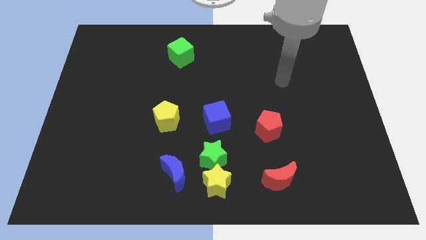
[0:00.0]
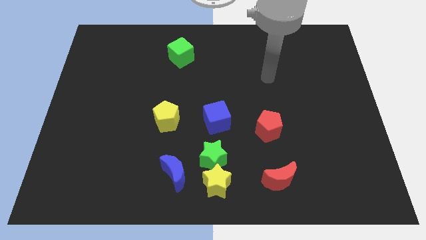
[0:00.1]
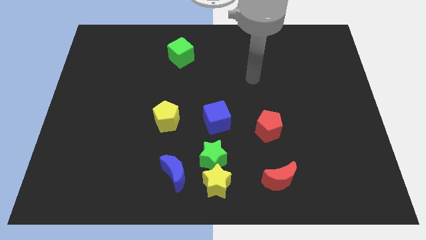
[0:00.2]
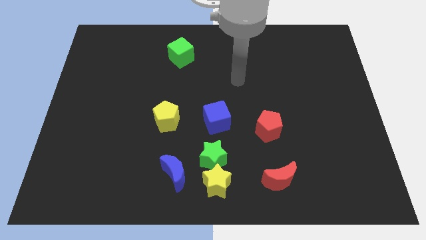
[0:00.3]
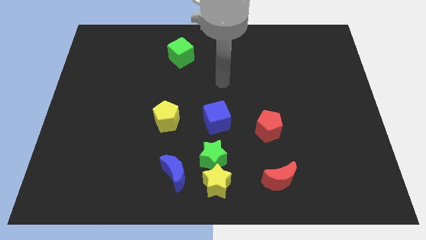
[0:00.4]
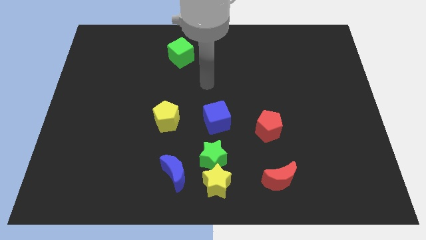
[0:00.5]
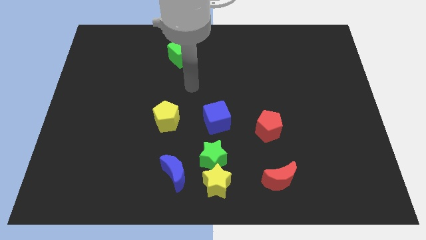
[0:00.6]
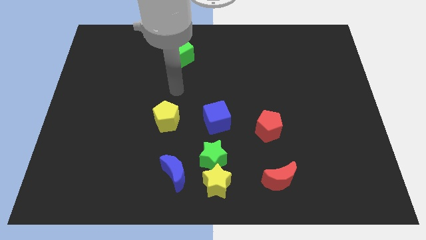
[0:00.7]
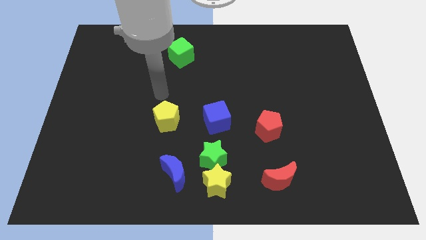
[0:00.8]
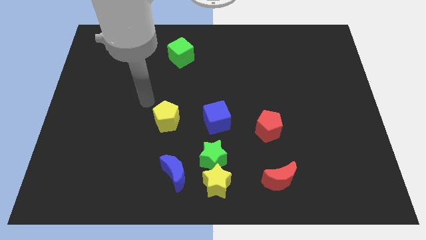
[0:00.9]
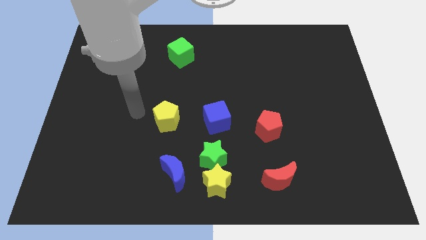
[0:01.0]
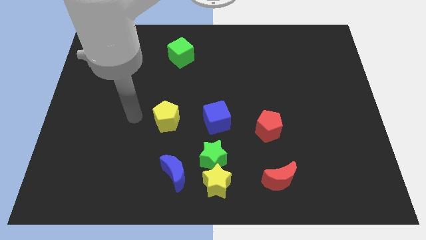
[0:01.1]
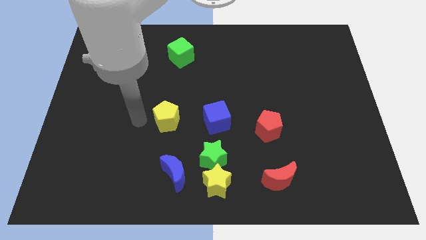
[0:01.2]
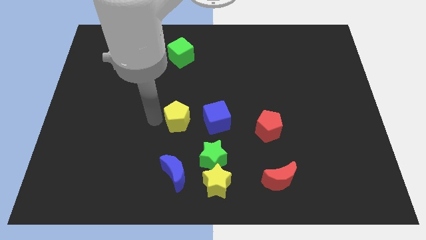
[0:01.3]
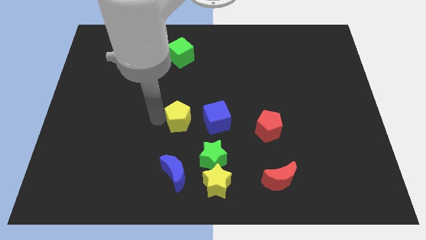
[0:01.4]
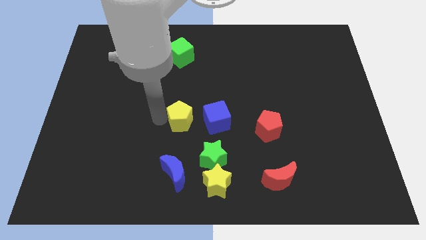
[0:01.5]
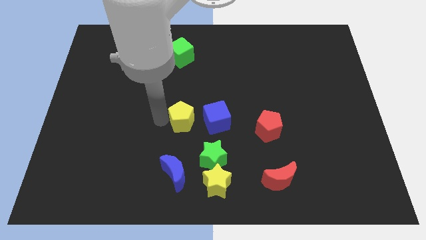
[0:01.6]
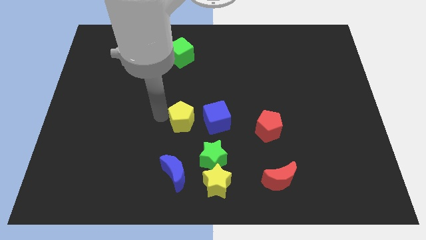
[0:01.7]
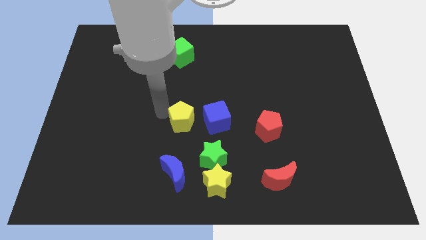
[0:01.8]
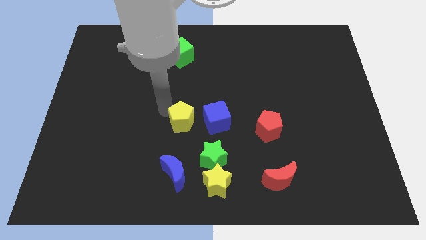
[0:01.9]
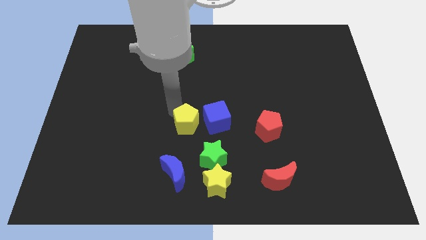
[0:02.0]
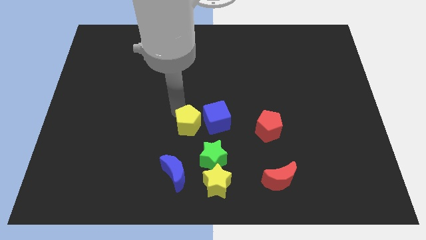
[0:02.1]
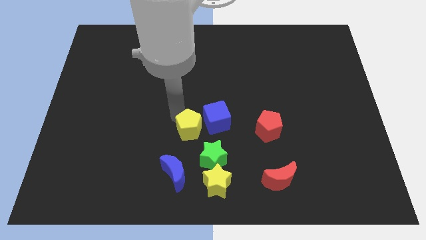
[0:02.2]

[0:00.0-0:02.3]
push the yellow pentagon to the left of blue cube

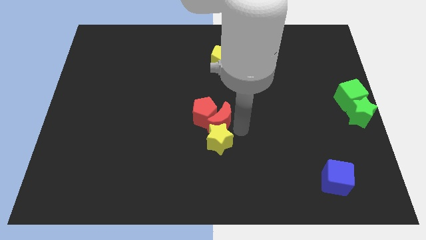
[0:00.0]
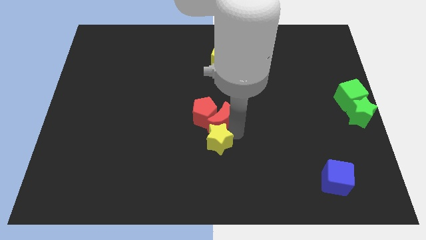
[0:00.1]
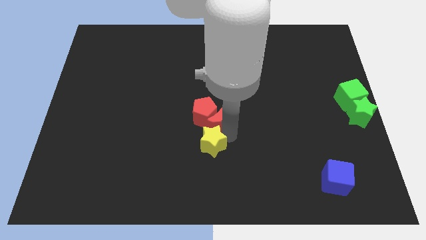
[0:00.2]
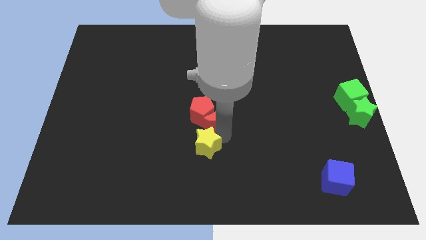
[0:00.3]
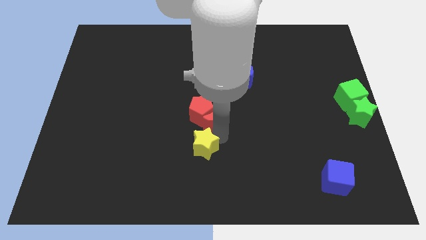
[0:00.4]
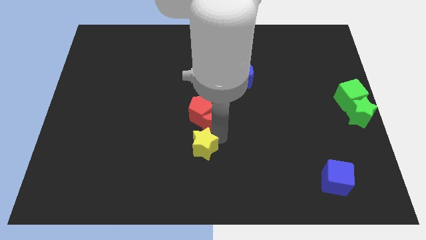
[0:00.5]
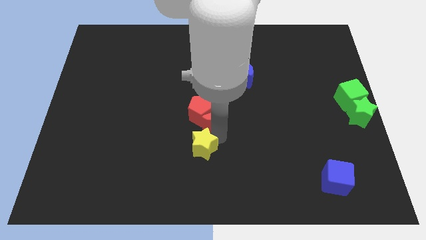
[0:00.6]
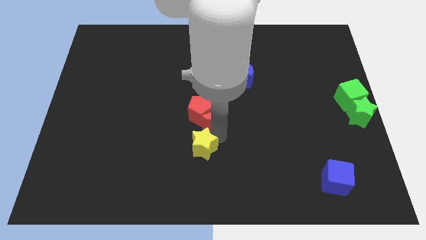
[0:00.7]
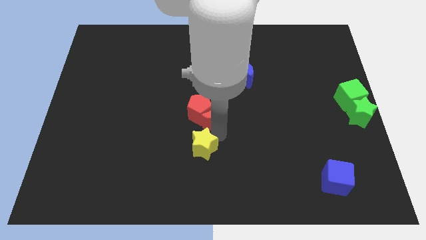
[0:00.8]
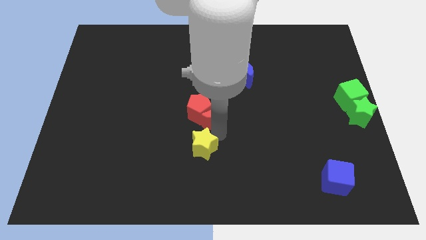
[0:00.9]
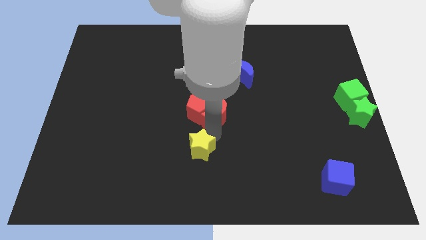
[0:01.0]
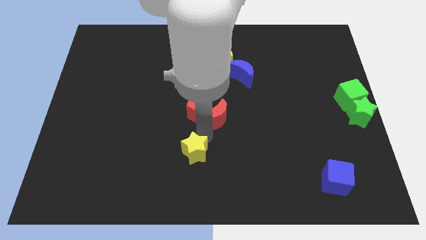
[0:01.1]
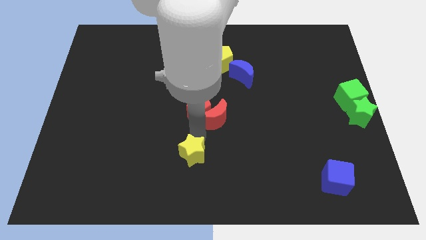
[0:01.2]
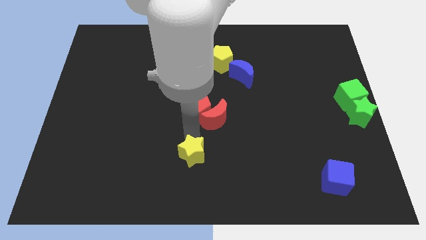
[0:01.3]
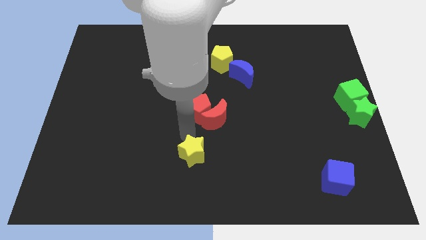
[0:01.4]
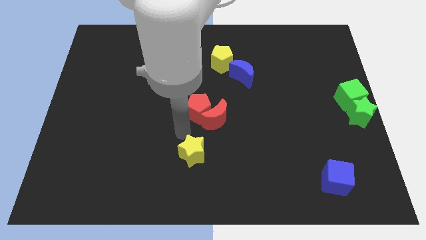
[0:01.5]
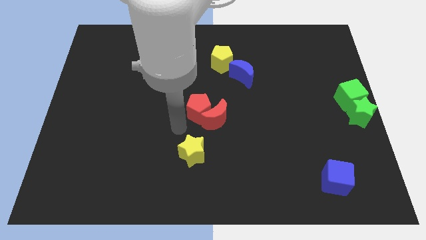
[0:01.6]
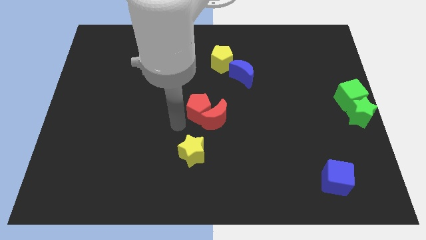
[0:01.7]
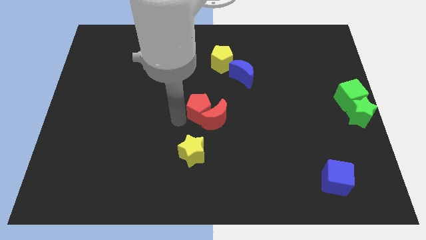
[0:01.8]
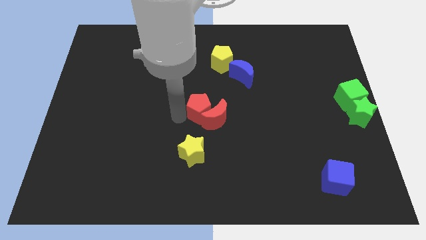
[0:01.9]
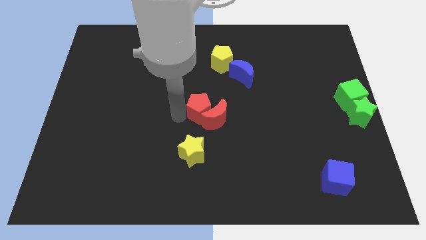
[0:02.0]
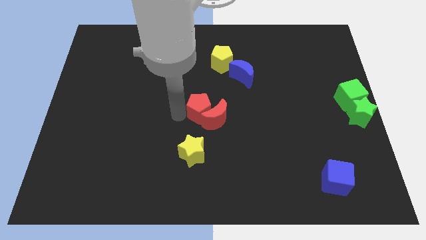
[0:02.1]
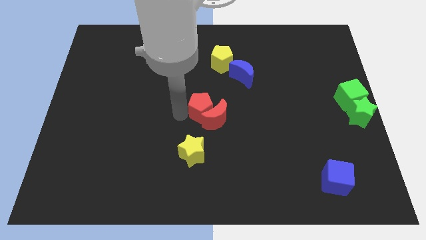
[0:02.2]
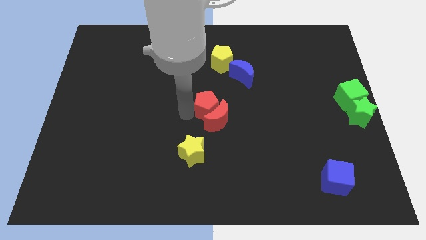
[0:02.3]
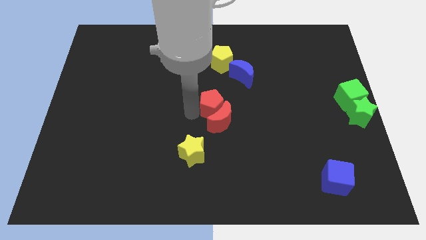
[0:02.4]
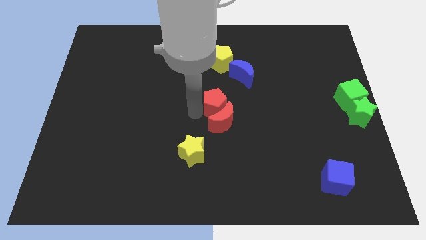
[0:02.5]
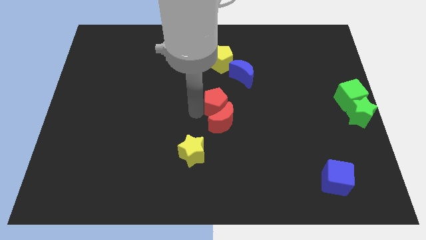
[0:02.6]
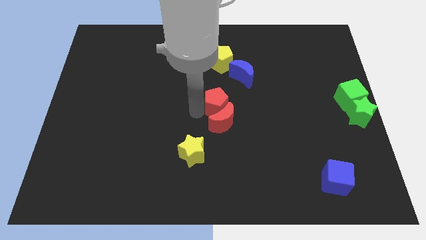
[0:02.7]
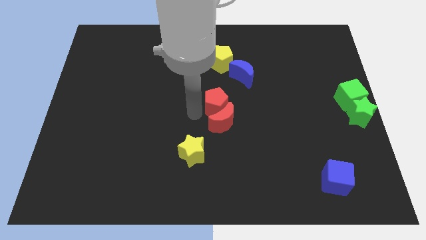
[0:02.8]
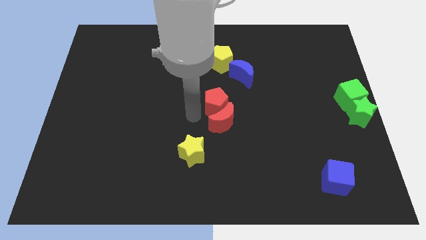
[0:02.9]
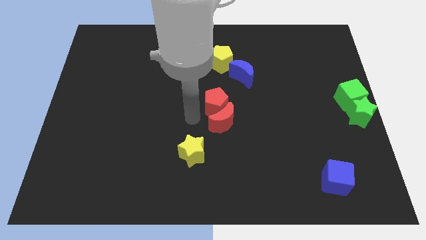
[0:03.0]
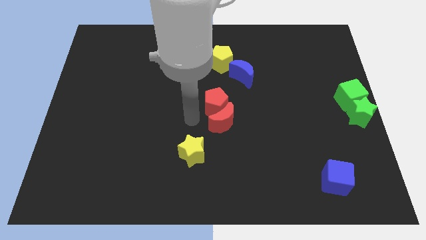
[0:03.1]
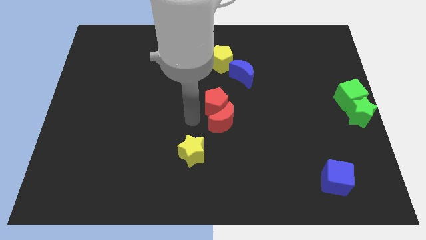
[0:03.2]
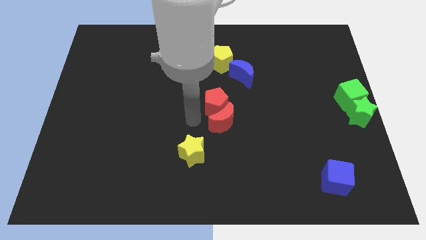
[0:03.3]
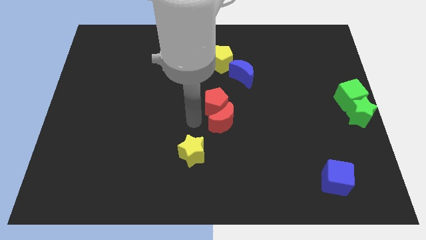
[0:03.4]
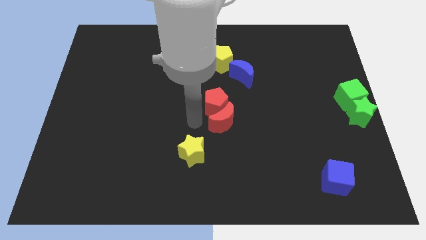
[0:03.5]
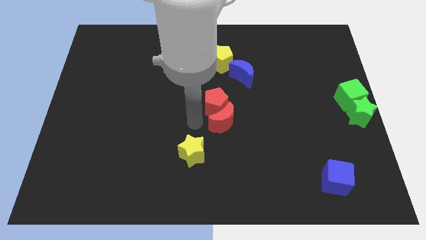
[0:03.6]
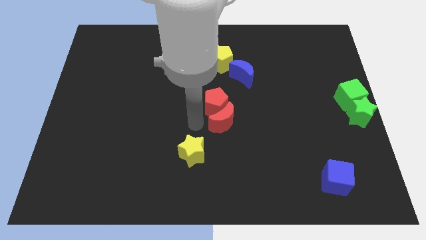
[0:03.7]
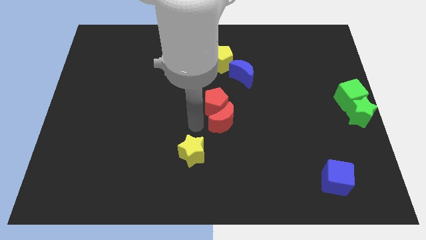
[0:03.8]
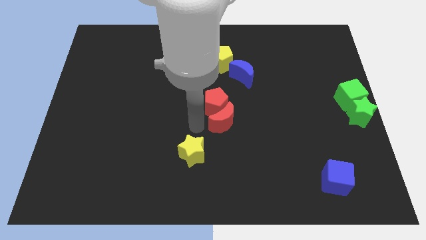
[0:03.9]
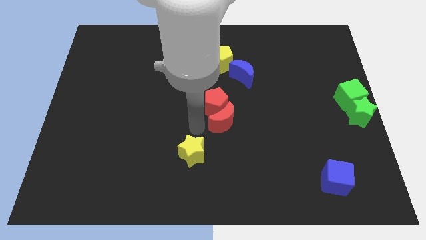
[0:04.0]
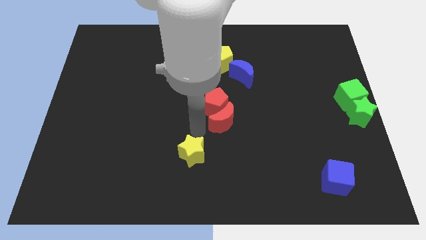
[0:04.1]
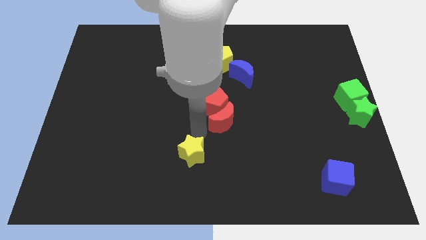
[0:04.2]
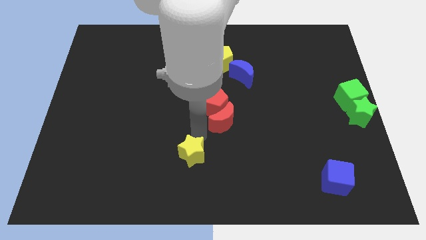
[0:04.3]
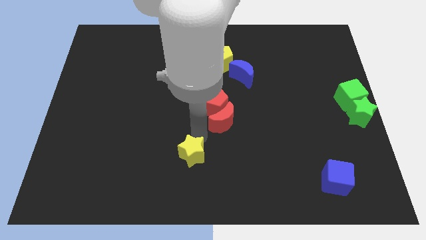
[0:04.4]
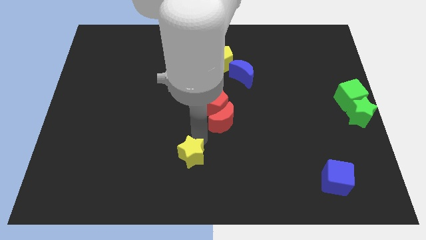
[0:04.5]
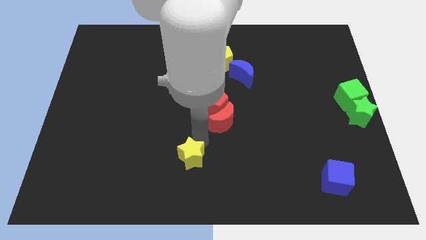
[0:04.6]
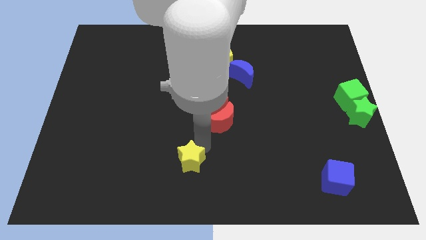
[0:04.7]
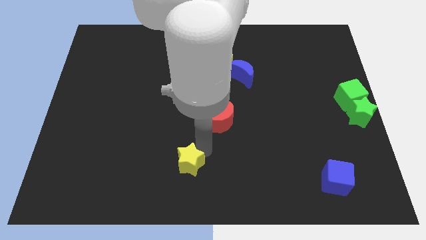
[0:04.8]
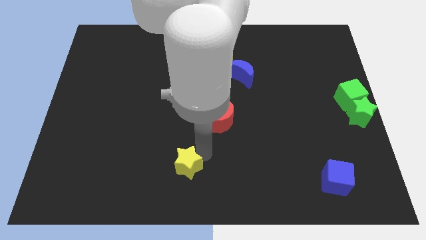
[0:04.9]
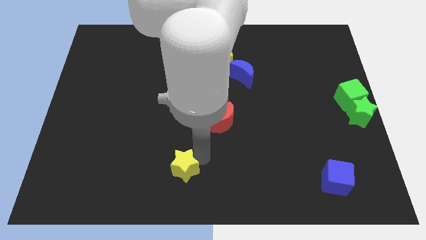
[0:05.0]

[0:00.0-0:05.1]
push the yellow star diagonal to the red crescent

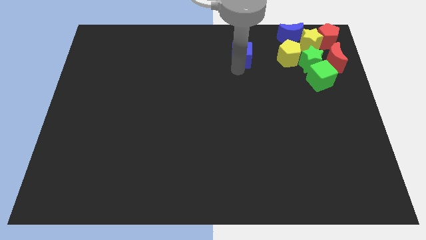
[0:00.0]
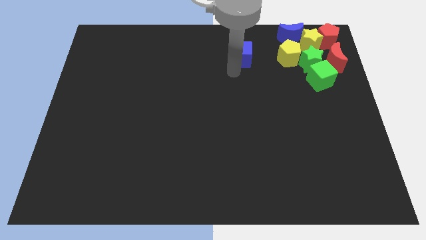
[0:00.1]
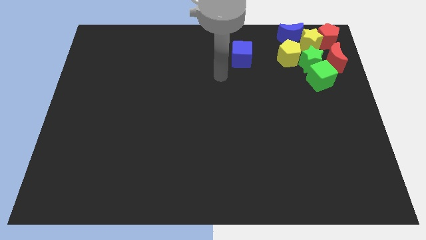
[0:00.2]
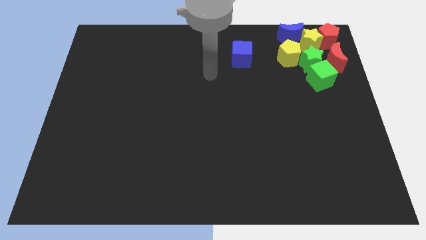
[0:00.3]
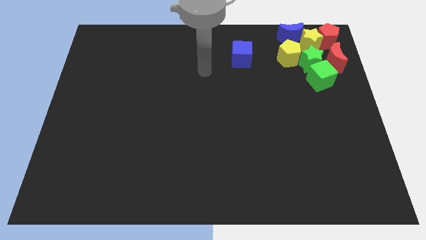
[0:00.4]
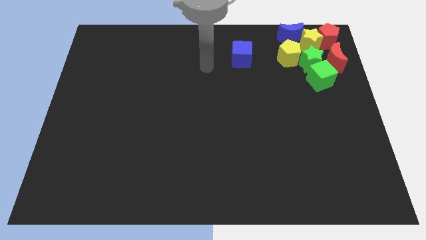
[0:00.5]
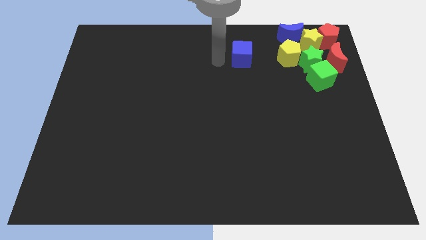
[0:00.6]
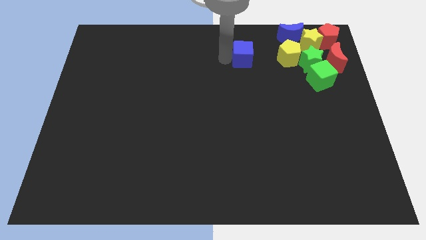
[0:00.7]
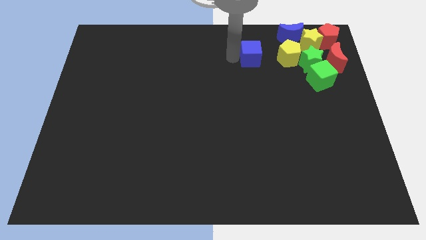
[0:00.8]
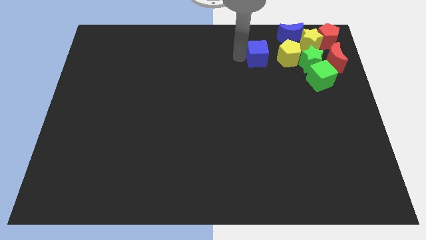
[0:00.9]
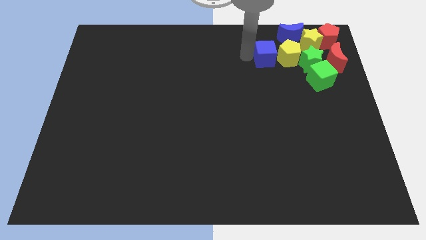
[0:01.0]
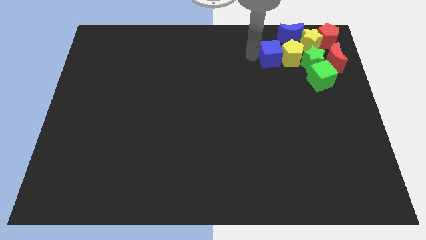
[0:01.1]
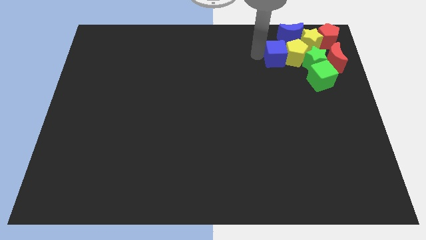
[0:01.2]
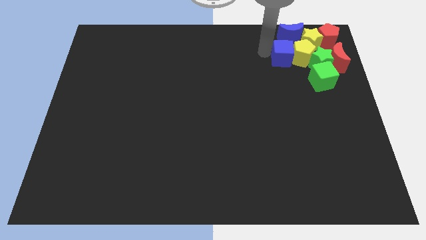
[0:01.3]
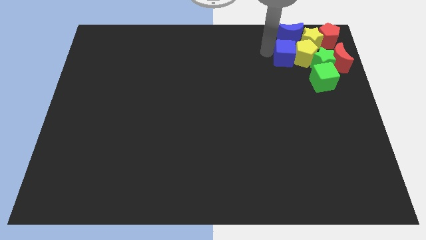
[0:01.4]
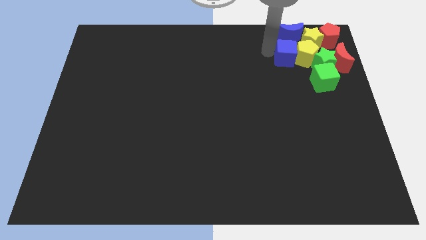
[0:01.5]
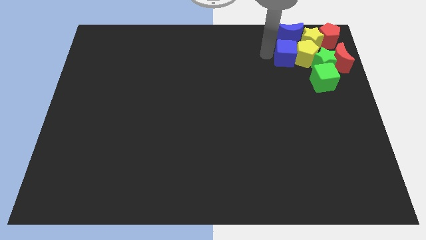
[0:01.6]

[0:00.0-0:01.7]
push the blue cube into the yellow pentagon
